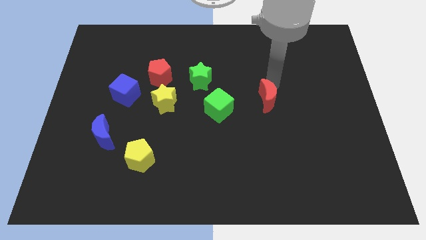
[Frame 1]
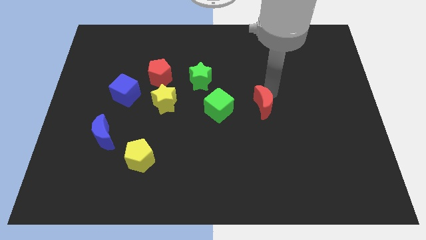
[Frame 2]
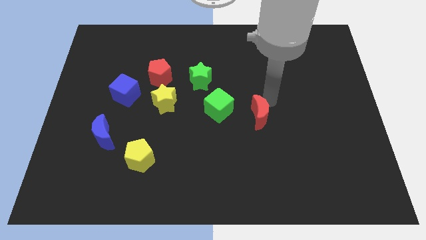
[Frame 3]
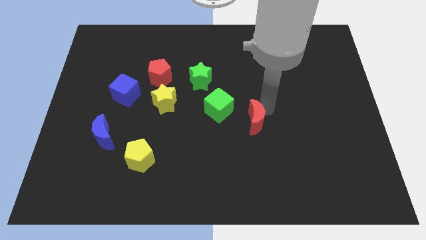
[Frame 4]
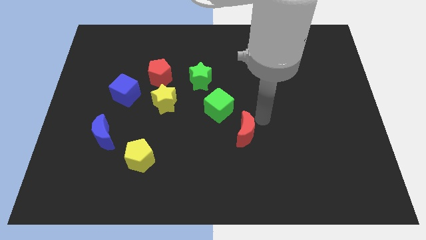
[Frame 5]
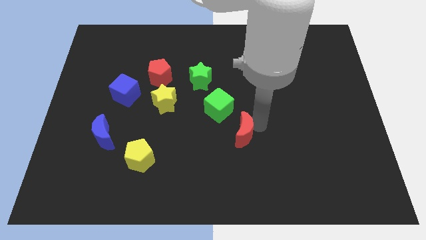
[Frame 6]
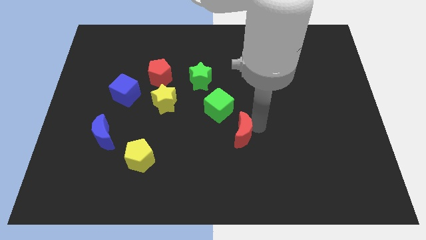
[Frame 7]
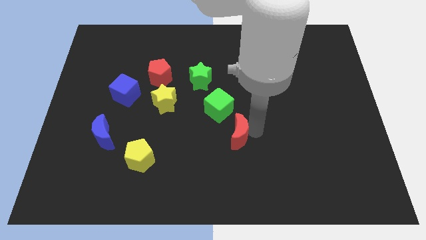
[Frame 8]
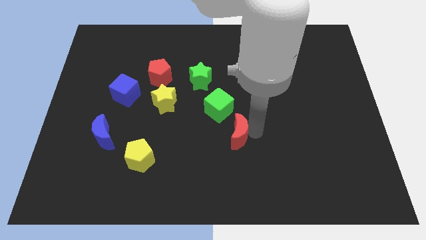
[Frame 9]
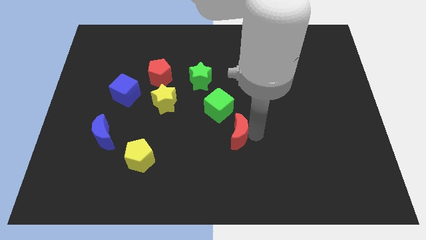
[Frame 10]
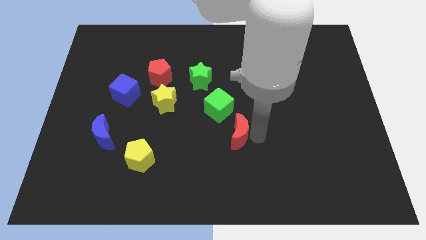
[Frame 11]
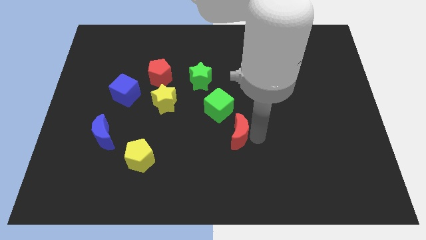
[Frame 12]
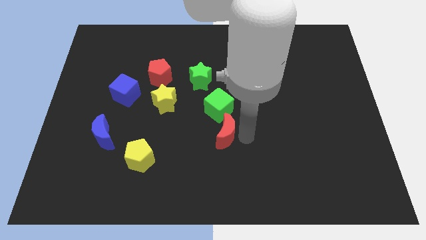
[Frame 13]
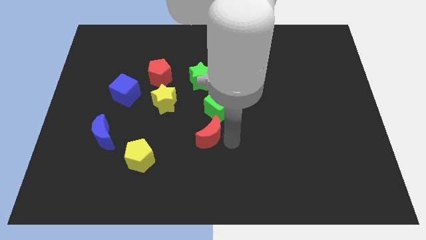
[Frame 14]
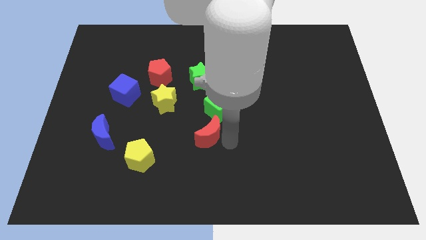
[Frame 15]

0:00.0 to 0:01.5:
push the red moon diagonally top right to yellow pentagon

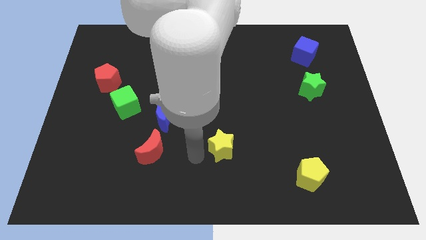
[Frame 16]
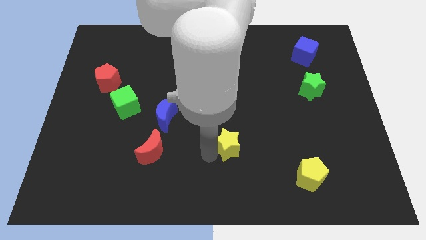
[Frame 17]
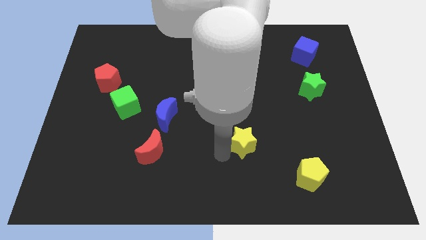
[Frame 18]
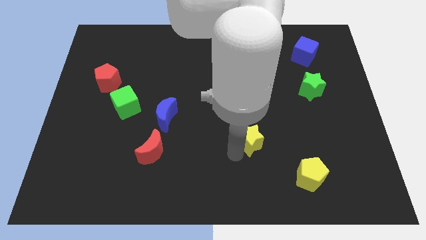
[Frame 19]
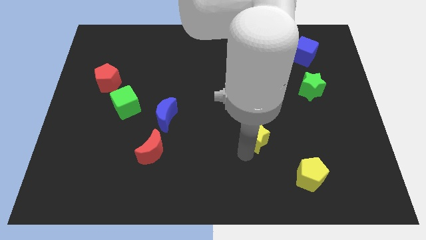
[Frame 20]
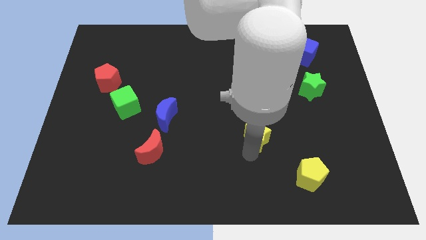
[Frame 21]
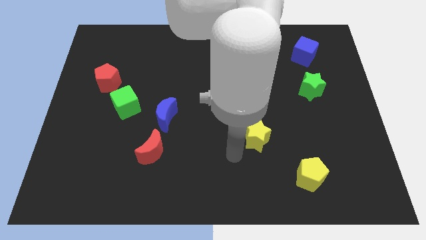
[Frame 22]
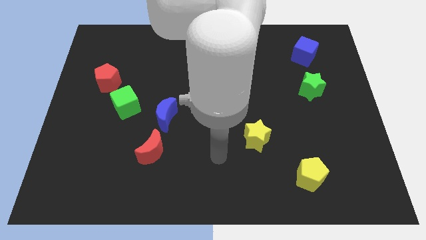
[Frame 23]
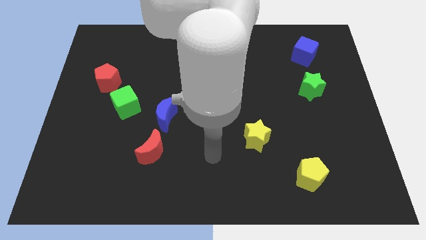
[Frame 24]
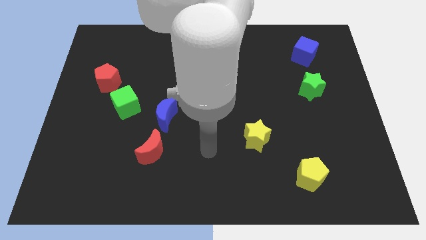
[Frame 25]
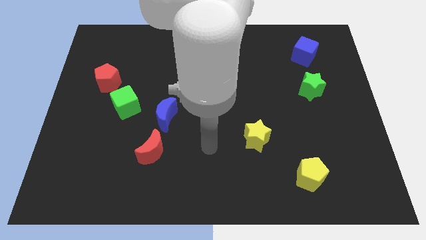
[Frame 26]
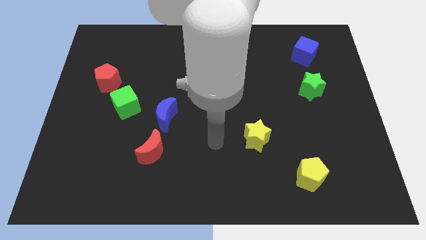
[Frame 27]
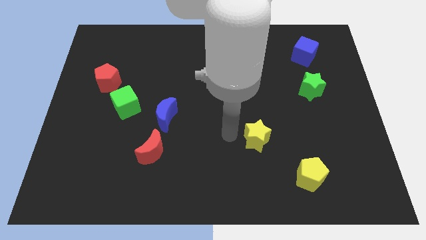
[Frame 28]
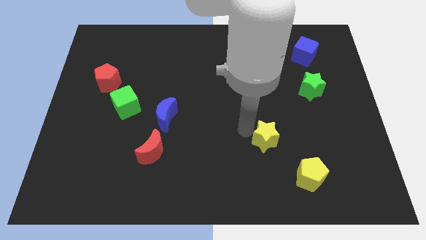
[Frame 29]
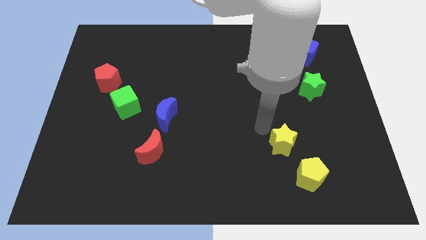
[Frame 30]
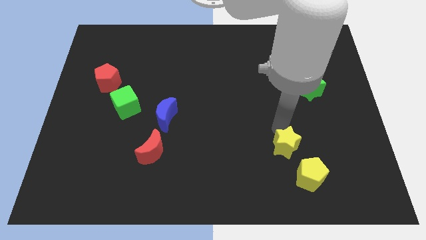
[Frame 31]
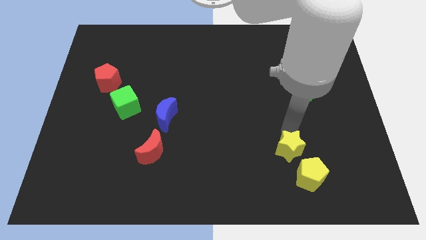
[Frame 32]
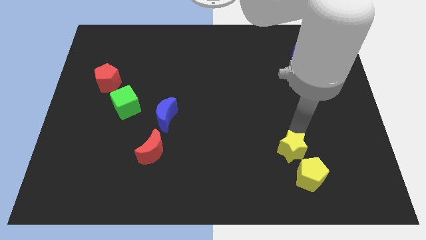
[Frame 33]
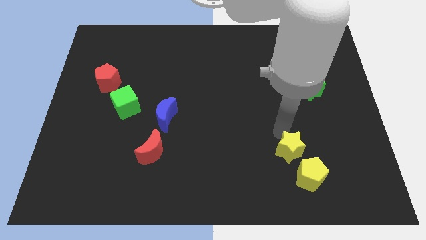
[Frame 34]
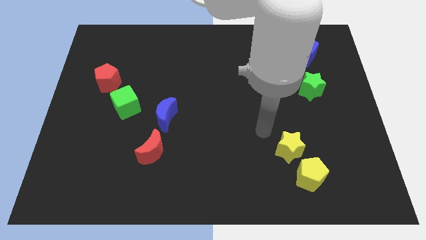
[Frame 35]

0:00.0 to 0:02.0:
move the yellow star to the top of the yellow pentagon

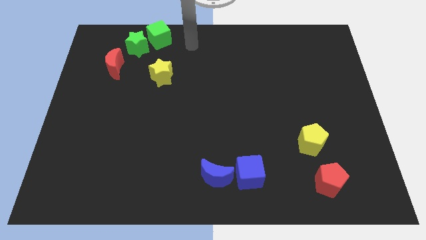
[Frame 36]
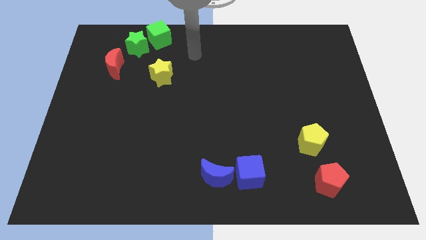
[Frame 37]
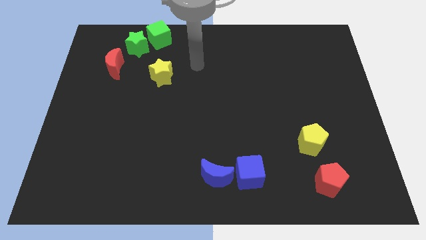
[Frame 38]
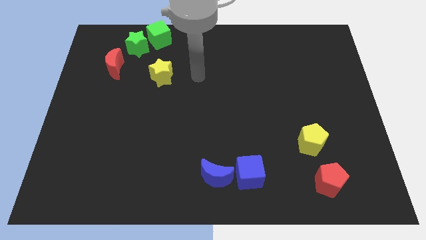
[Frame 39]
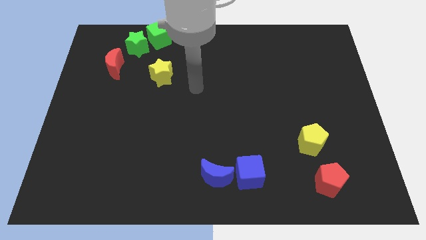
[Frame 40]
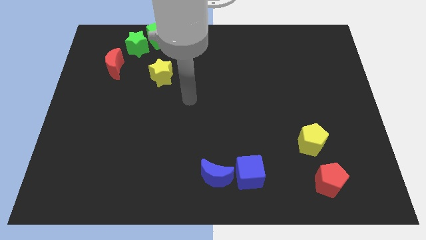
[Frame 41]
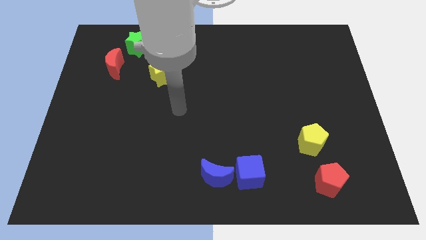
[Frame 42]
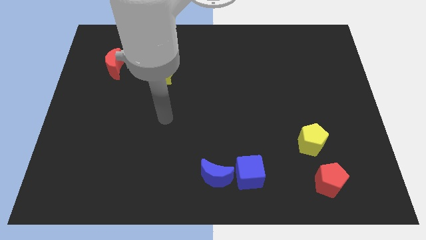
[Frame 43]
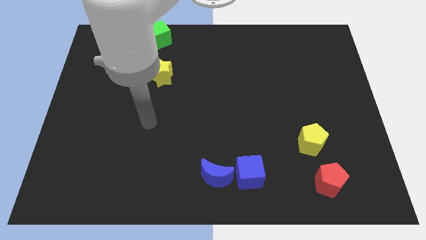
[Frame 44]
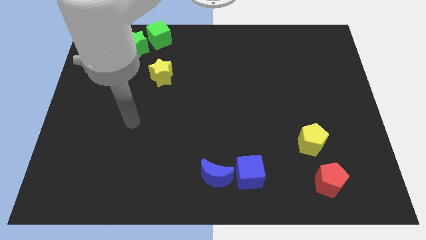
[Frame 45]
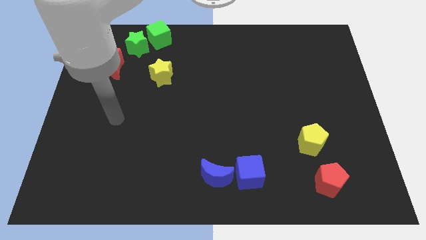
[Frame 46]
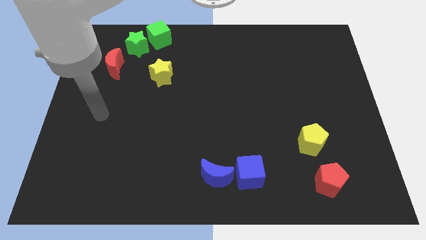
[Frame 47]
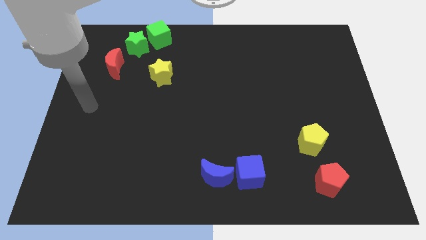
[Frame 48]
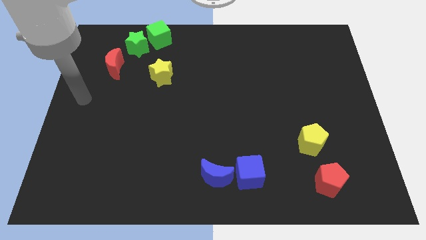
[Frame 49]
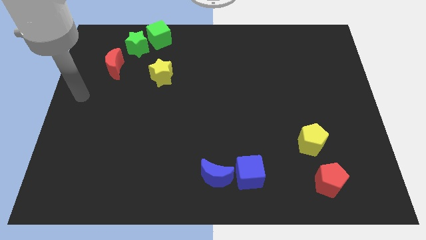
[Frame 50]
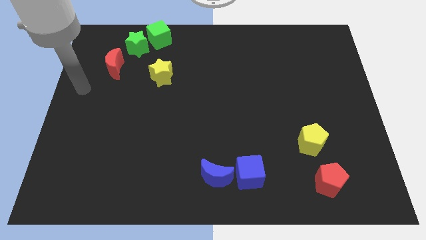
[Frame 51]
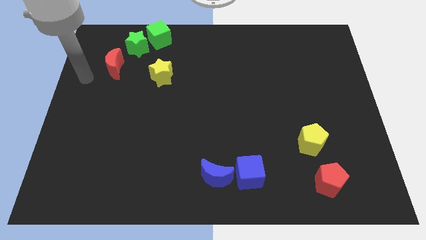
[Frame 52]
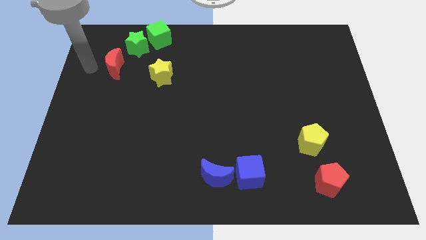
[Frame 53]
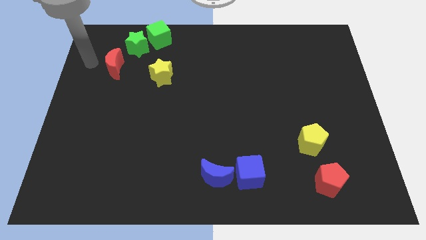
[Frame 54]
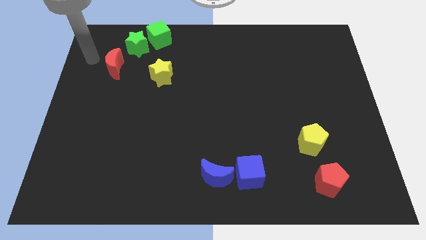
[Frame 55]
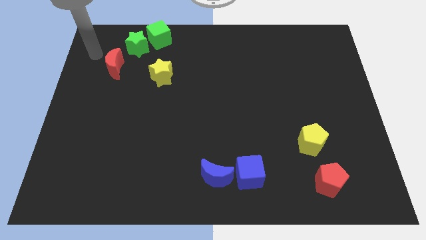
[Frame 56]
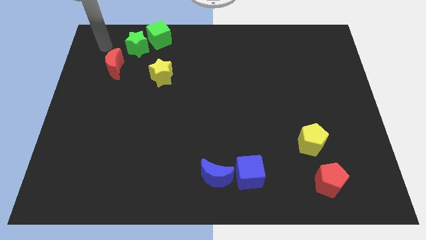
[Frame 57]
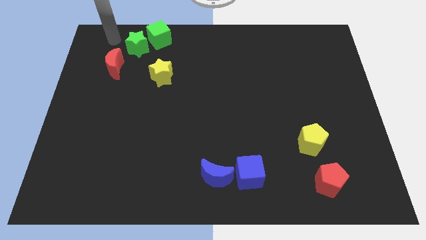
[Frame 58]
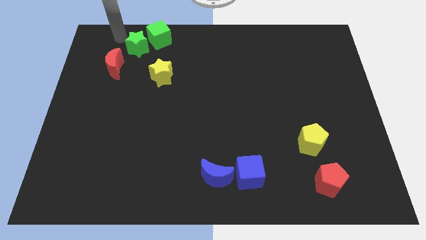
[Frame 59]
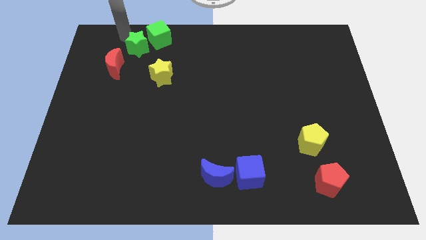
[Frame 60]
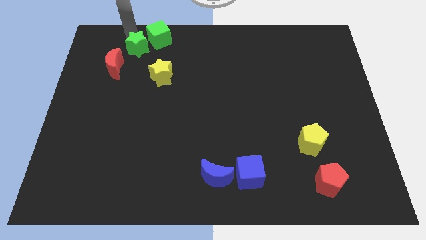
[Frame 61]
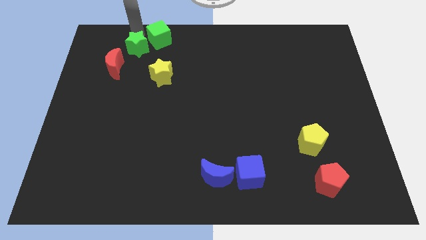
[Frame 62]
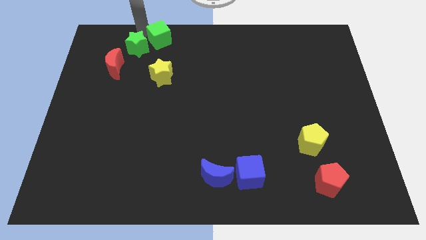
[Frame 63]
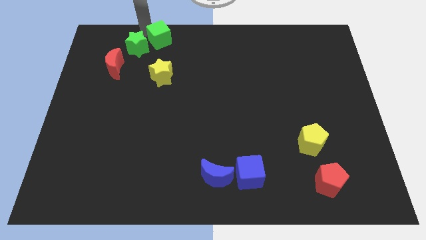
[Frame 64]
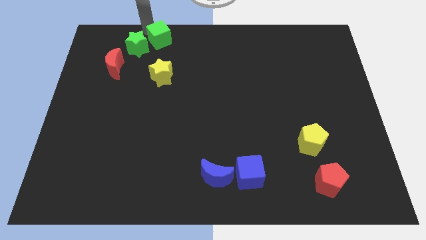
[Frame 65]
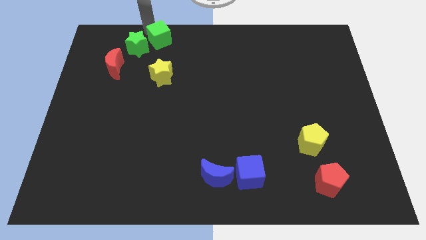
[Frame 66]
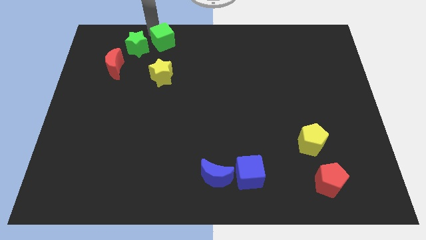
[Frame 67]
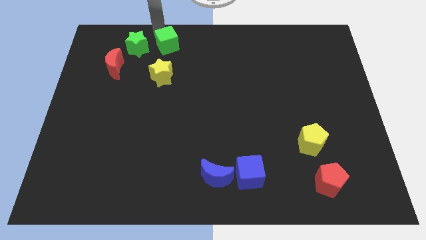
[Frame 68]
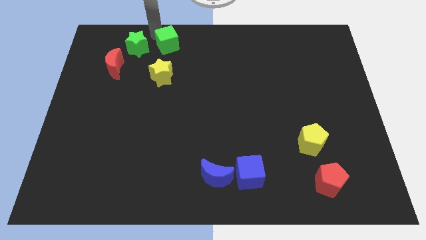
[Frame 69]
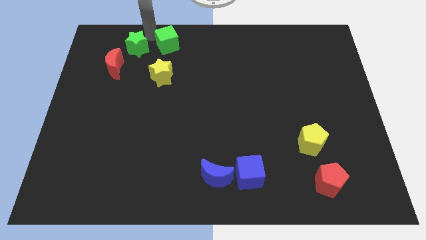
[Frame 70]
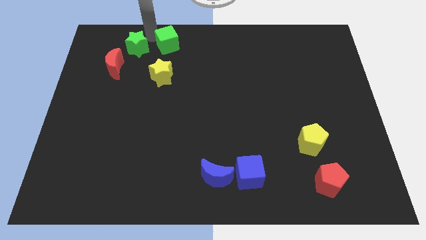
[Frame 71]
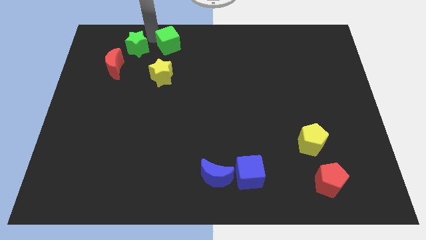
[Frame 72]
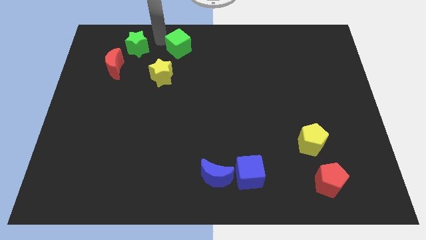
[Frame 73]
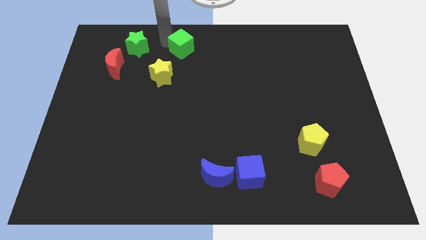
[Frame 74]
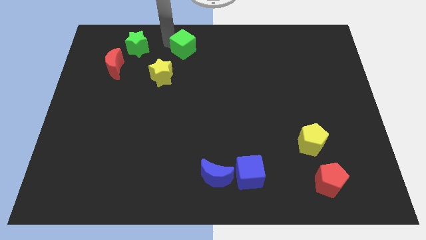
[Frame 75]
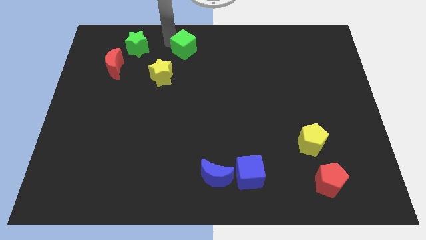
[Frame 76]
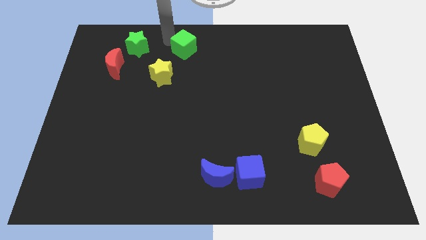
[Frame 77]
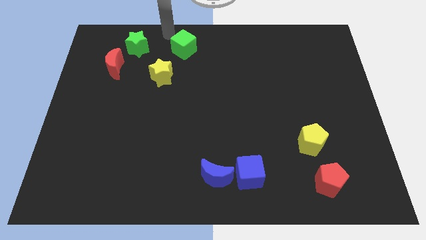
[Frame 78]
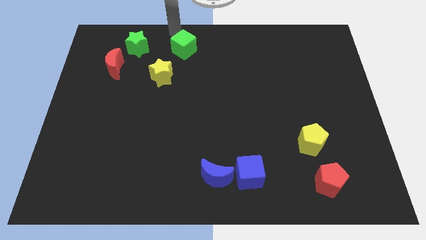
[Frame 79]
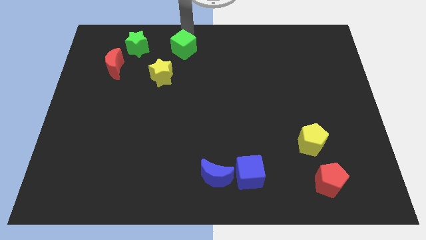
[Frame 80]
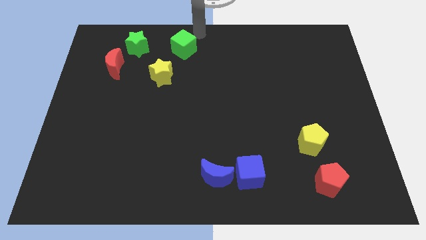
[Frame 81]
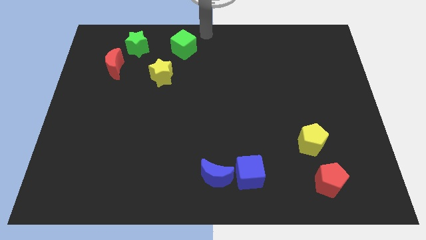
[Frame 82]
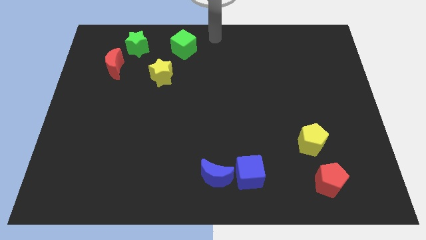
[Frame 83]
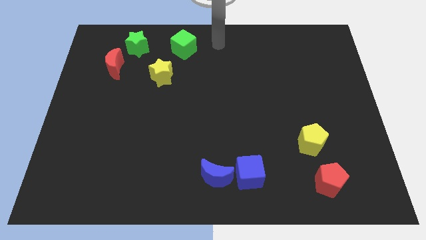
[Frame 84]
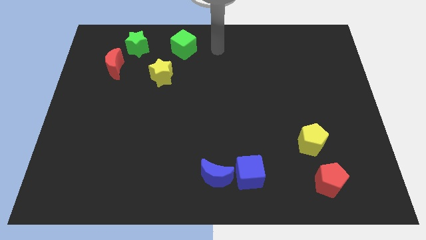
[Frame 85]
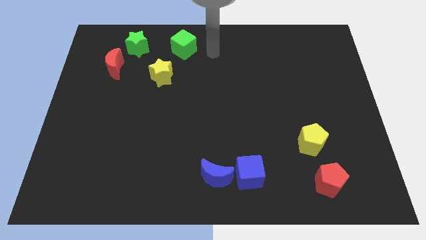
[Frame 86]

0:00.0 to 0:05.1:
move the green cube to the bottom of the board

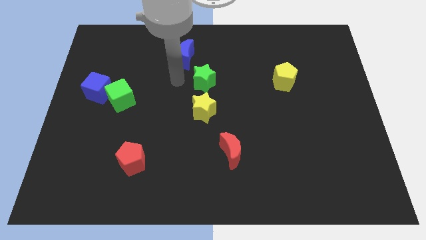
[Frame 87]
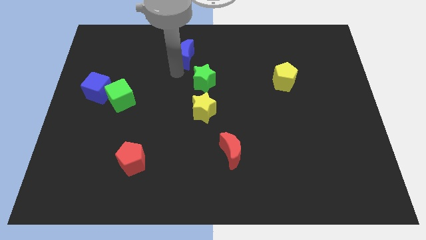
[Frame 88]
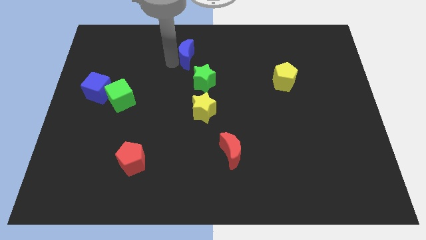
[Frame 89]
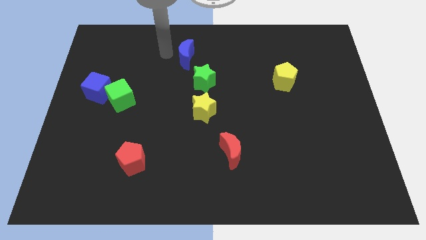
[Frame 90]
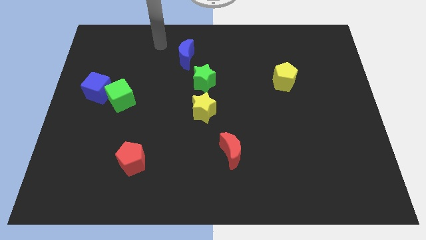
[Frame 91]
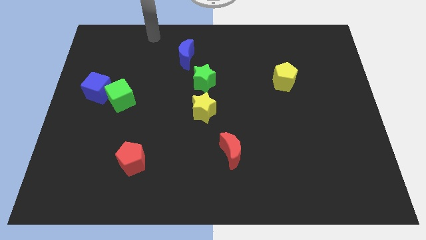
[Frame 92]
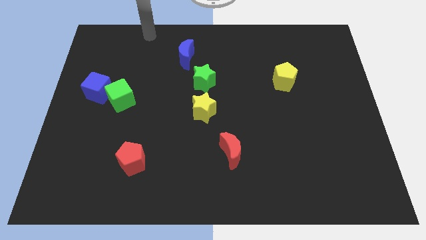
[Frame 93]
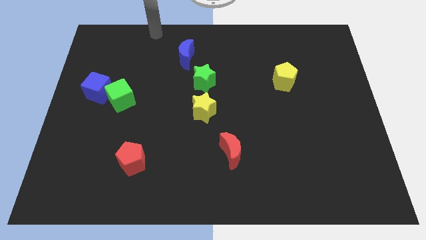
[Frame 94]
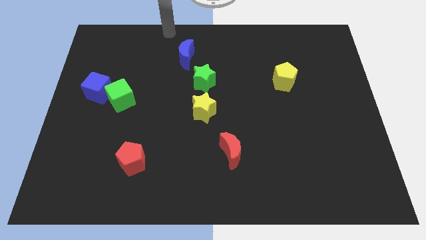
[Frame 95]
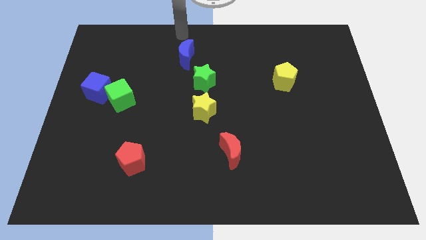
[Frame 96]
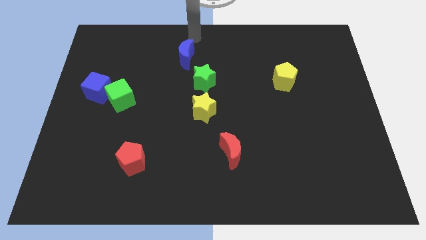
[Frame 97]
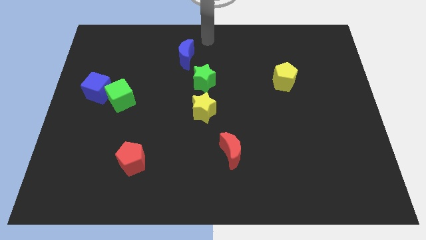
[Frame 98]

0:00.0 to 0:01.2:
move your arm to the top center of the board
